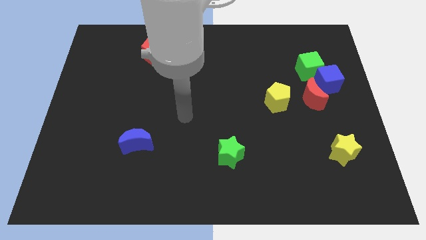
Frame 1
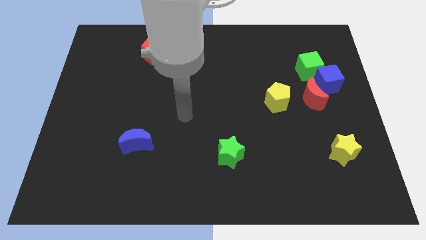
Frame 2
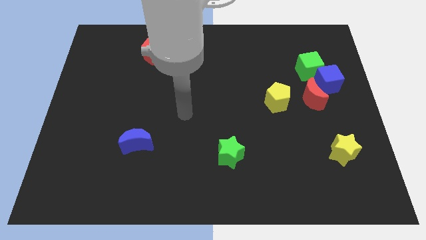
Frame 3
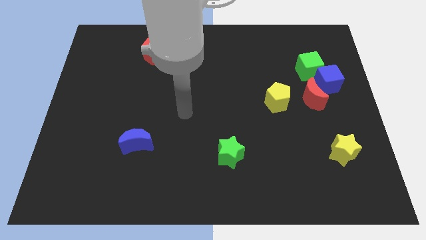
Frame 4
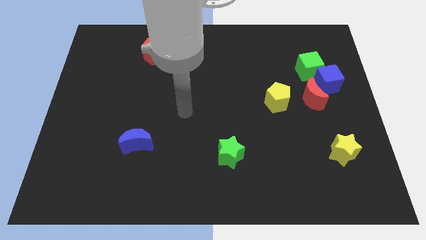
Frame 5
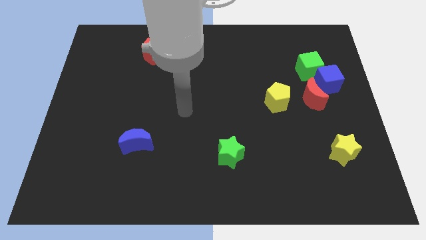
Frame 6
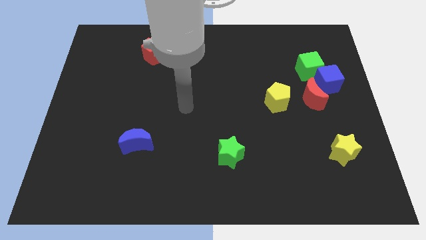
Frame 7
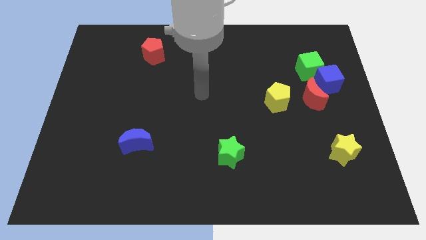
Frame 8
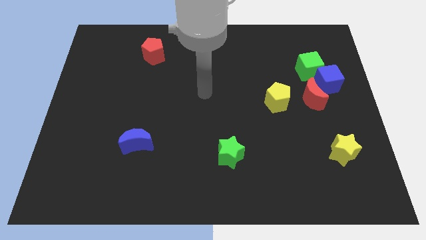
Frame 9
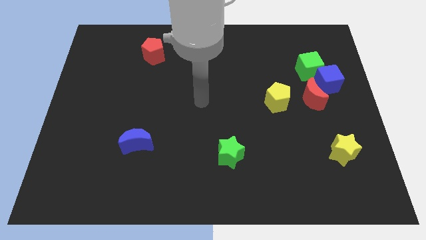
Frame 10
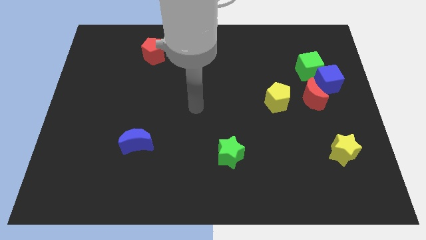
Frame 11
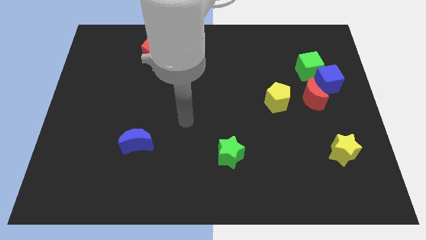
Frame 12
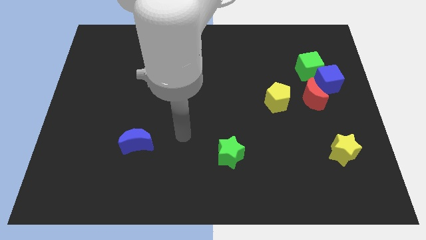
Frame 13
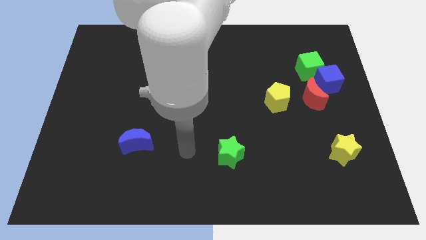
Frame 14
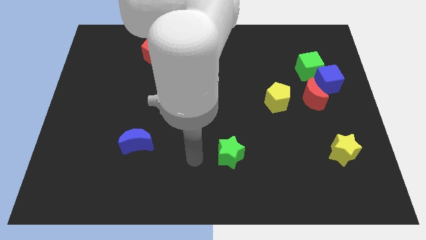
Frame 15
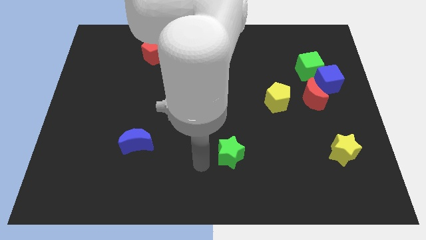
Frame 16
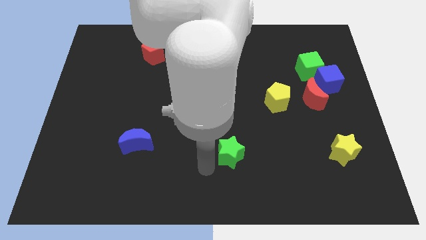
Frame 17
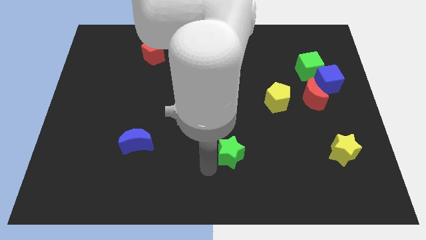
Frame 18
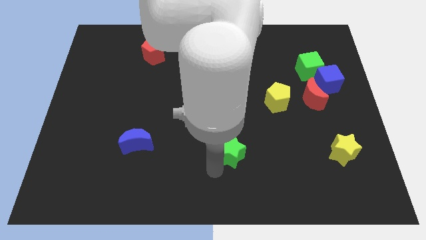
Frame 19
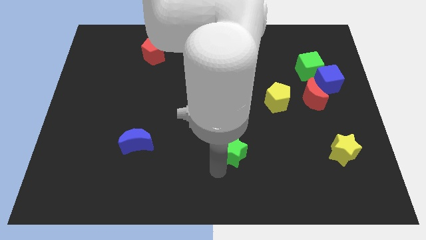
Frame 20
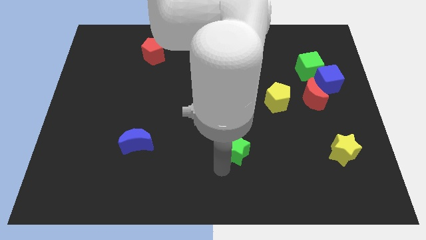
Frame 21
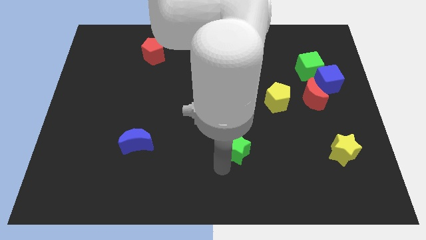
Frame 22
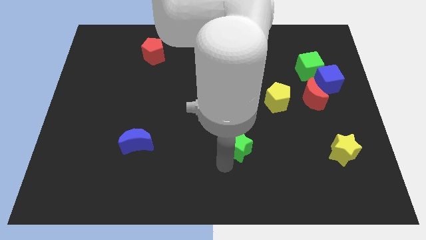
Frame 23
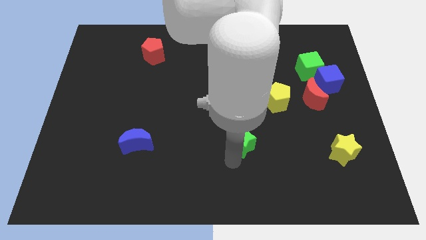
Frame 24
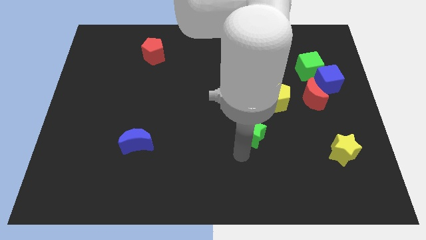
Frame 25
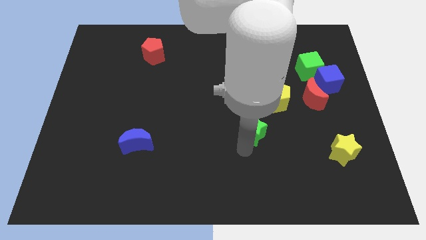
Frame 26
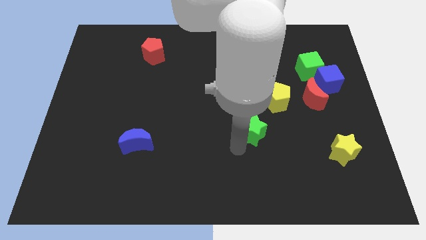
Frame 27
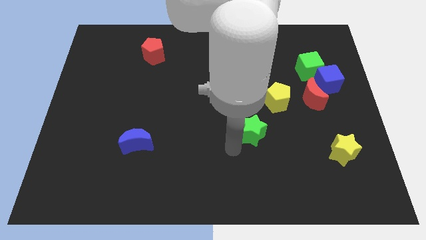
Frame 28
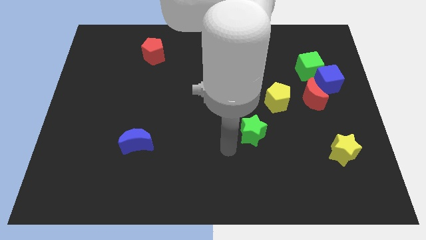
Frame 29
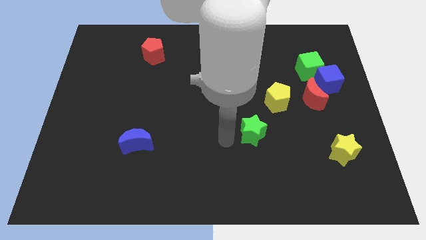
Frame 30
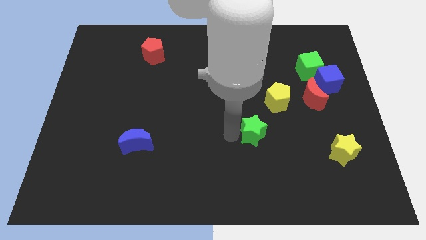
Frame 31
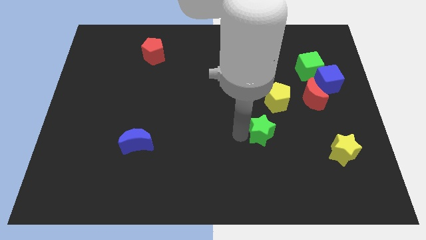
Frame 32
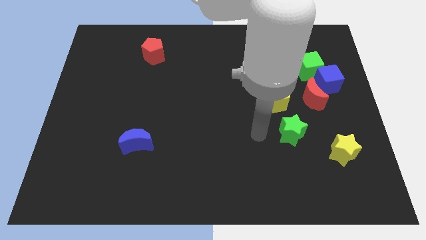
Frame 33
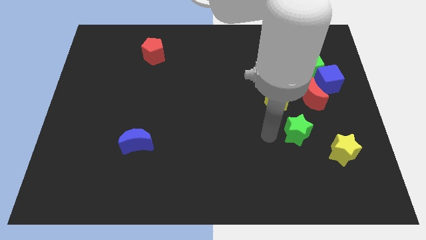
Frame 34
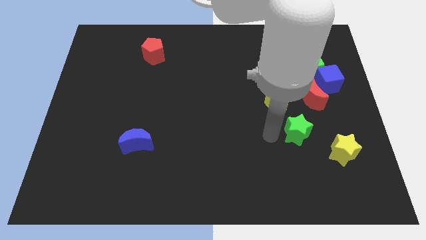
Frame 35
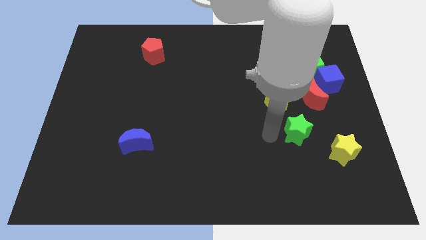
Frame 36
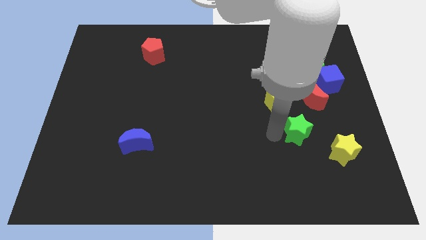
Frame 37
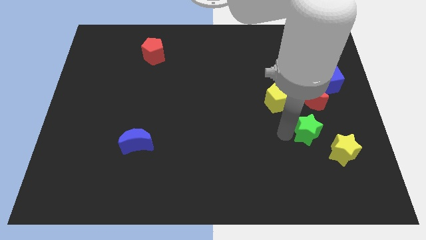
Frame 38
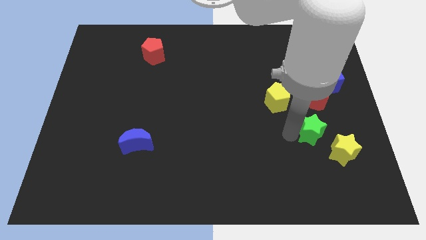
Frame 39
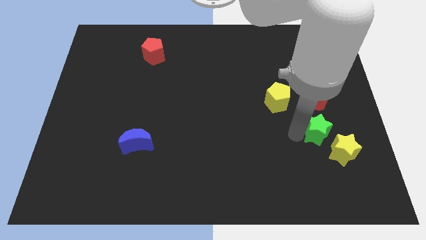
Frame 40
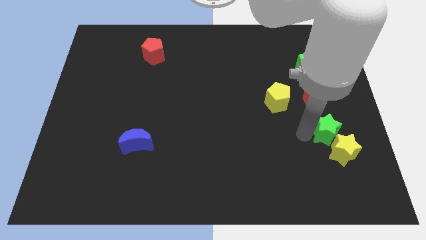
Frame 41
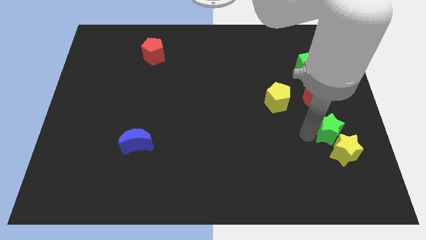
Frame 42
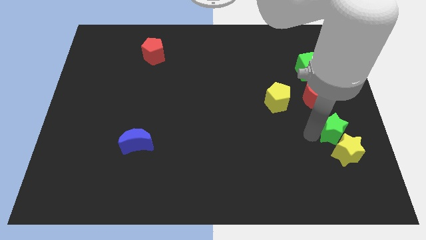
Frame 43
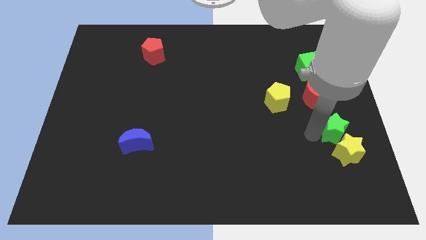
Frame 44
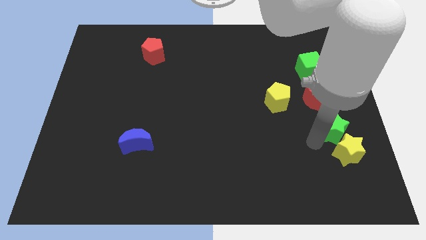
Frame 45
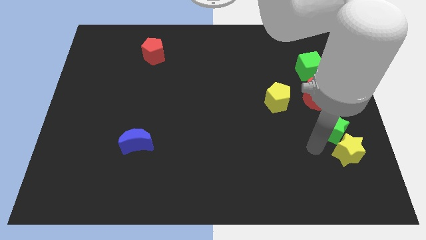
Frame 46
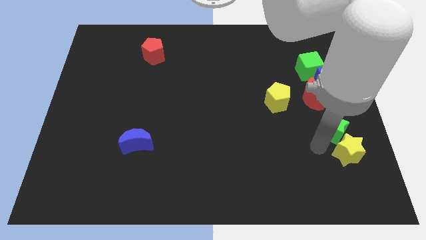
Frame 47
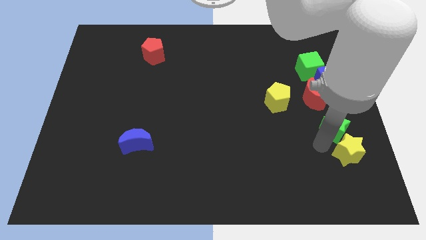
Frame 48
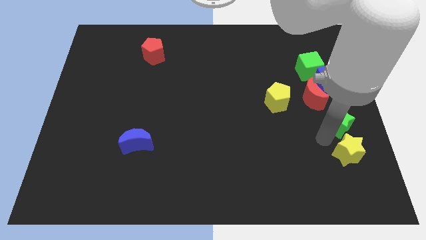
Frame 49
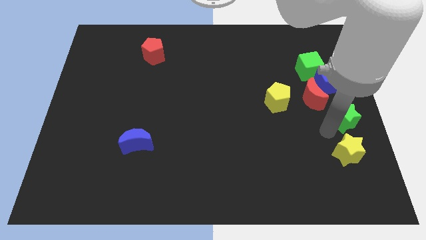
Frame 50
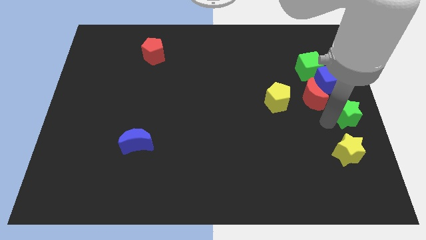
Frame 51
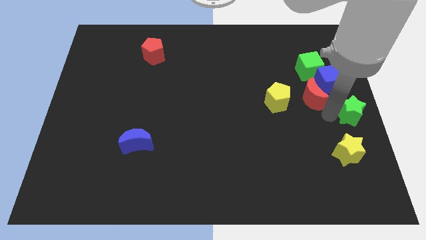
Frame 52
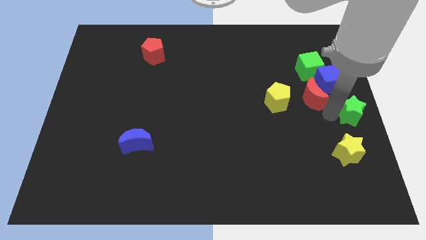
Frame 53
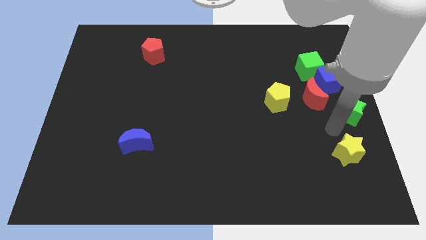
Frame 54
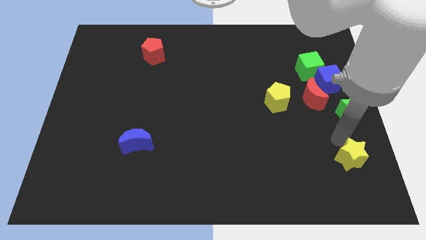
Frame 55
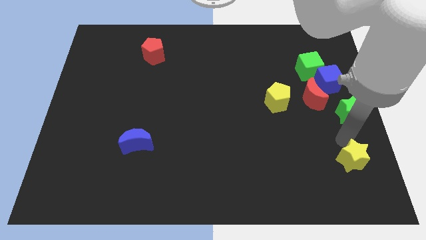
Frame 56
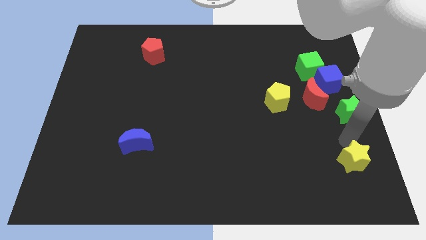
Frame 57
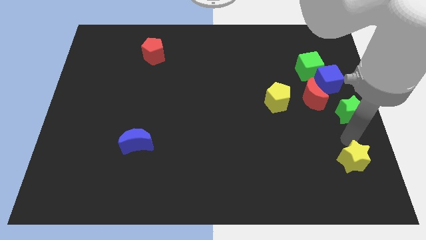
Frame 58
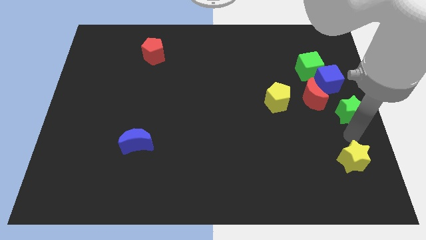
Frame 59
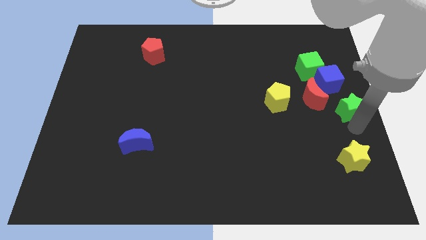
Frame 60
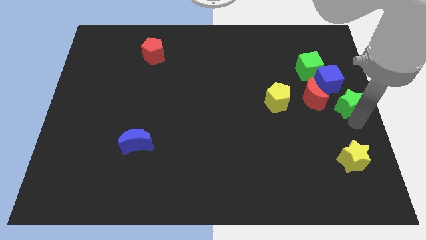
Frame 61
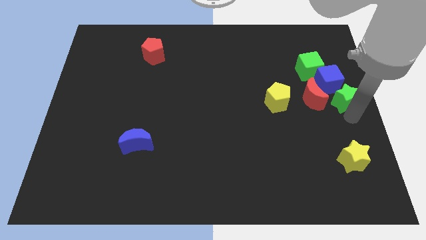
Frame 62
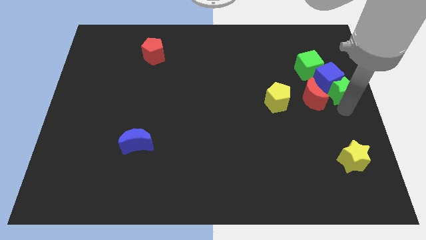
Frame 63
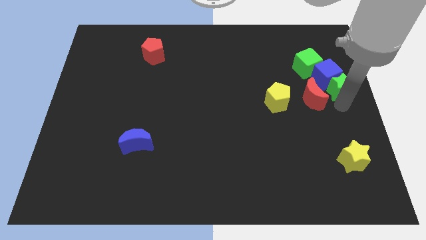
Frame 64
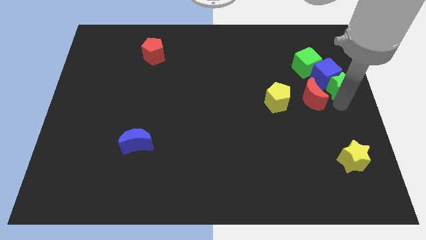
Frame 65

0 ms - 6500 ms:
push the green star to the blue cube

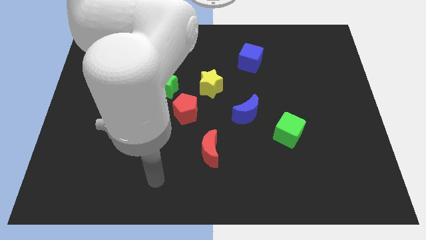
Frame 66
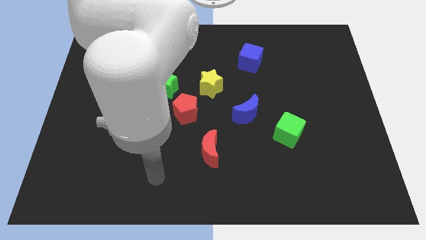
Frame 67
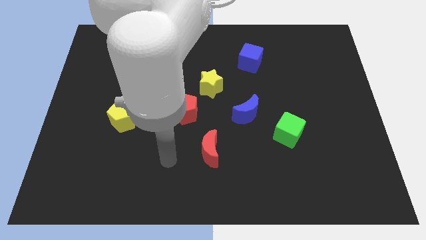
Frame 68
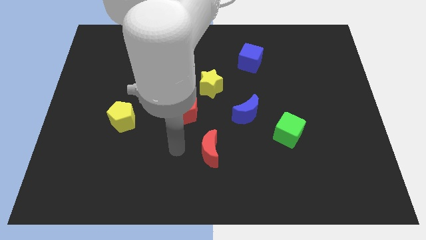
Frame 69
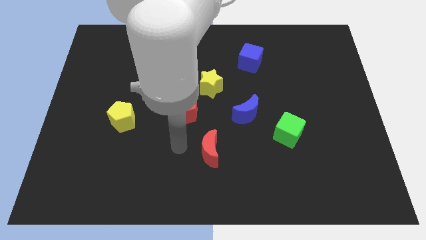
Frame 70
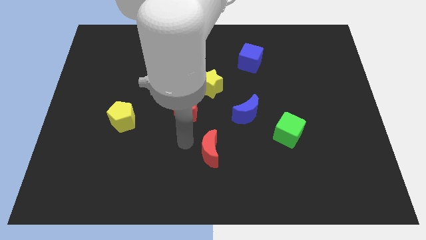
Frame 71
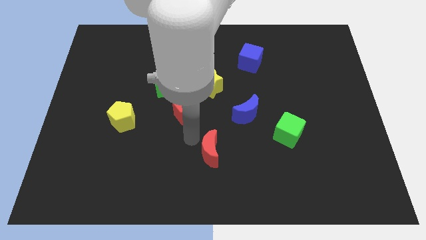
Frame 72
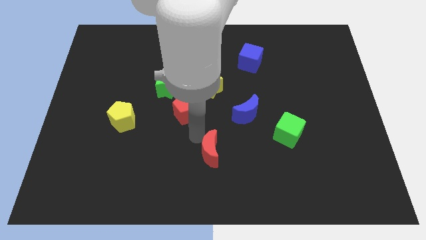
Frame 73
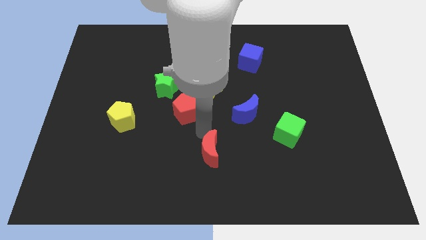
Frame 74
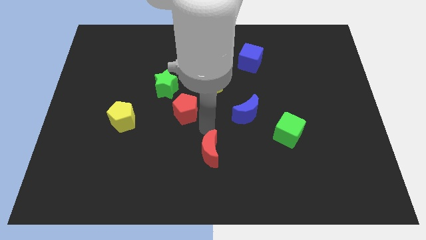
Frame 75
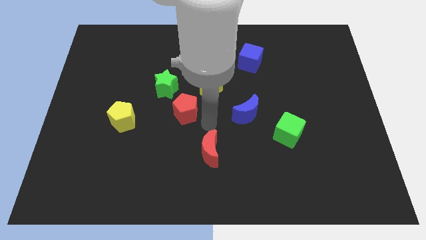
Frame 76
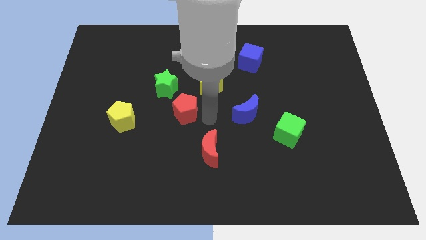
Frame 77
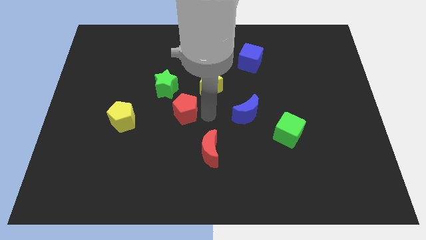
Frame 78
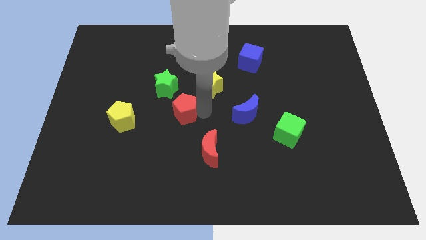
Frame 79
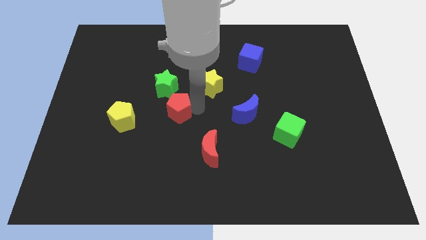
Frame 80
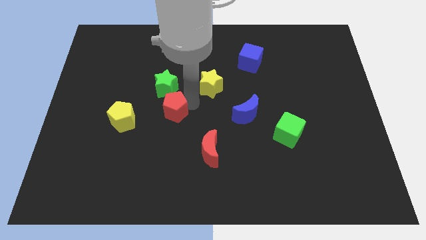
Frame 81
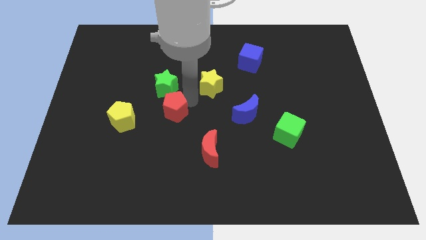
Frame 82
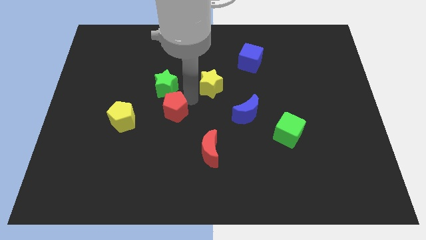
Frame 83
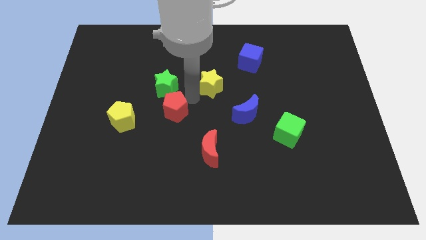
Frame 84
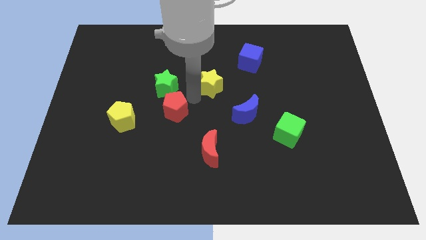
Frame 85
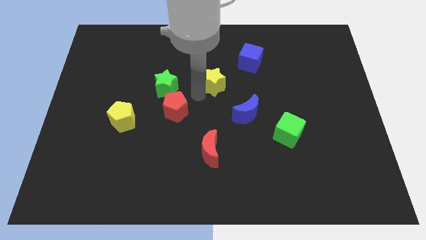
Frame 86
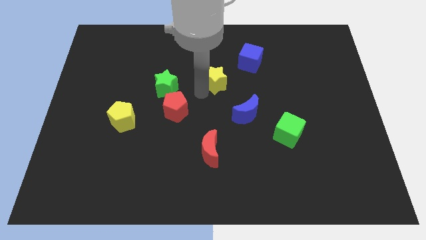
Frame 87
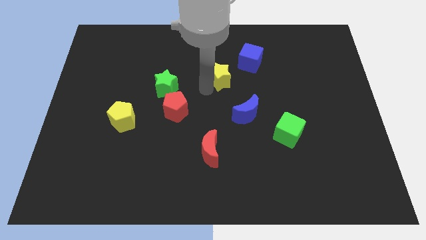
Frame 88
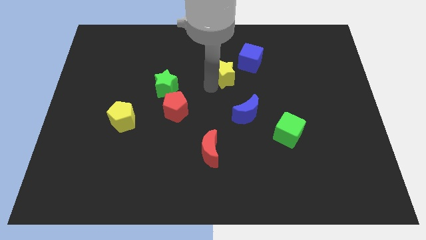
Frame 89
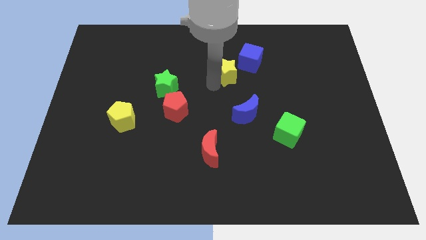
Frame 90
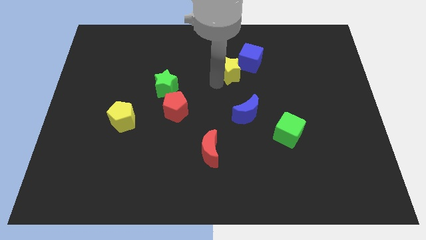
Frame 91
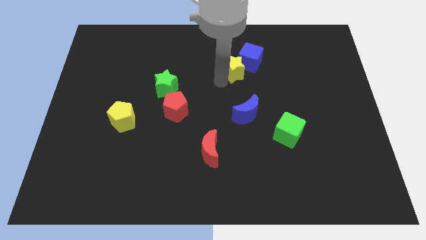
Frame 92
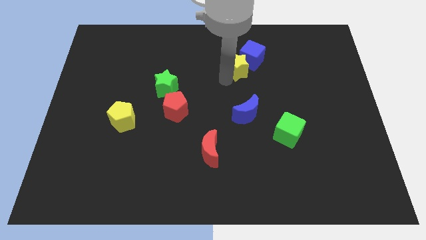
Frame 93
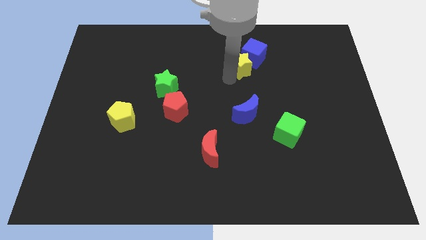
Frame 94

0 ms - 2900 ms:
move the yellow star next to the blue cube
